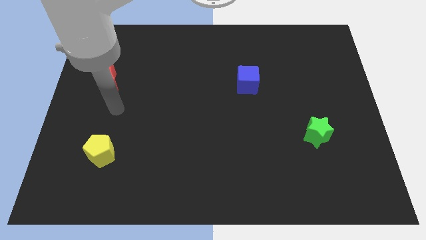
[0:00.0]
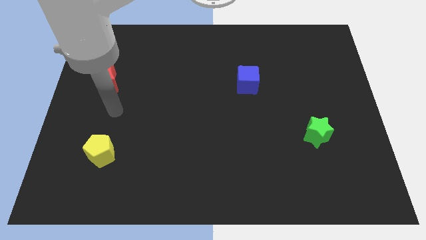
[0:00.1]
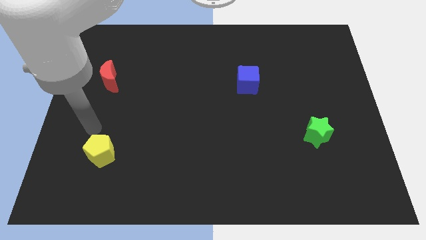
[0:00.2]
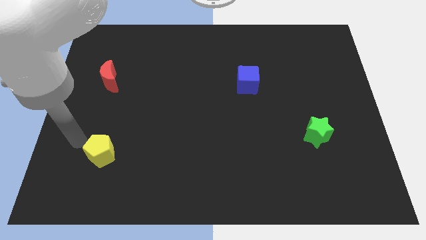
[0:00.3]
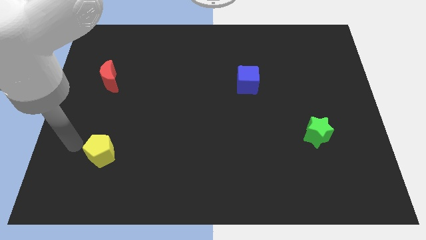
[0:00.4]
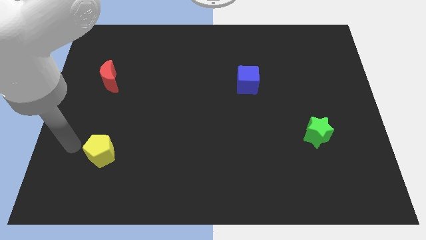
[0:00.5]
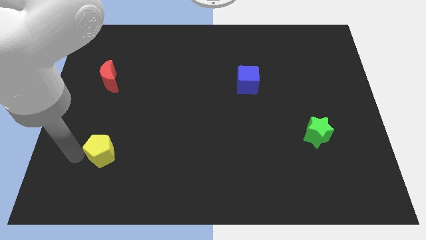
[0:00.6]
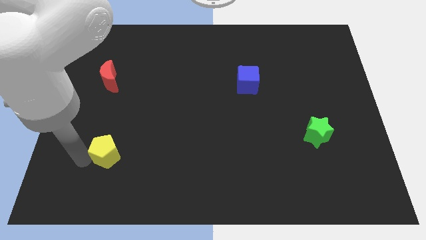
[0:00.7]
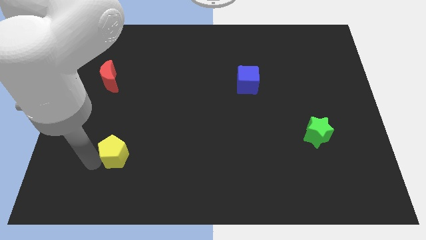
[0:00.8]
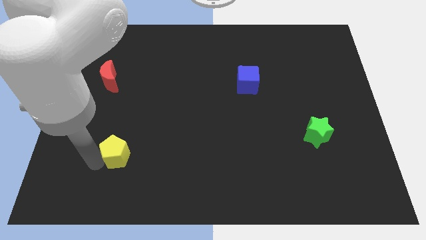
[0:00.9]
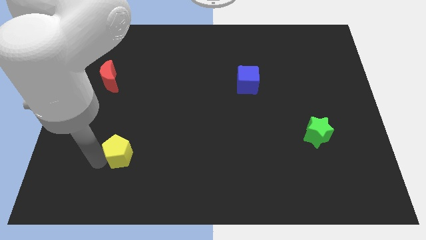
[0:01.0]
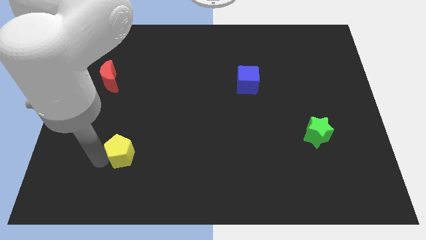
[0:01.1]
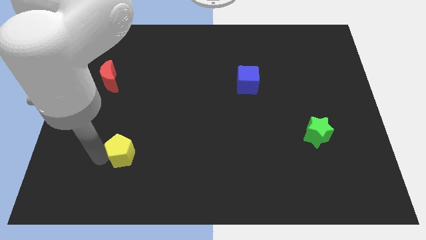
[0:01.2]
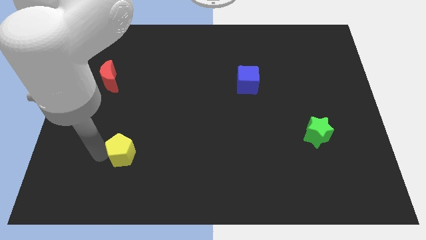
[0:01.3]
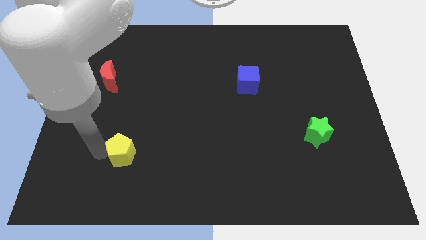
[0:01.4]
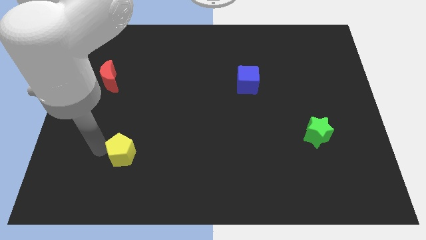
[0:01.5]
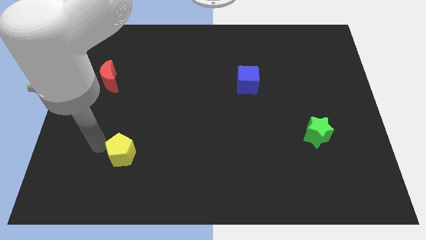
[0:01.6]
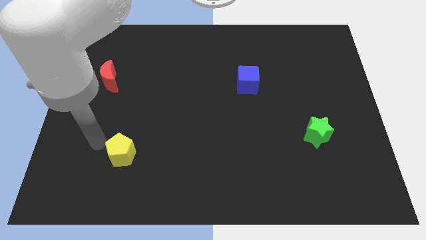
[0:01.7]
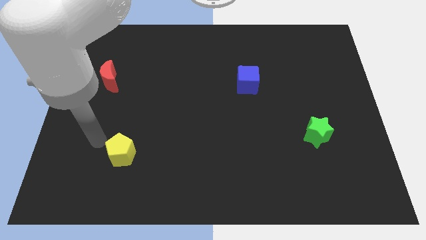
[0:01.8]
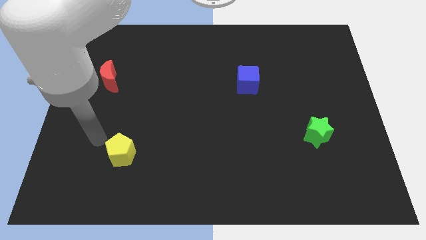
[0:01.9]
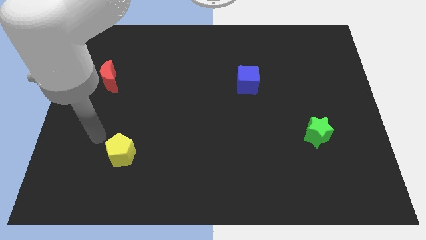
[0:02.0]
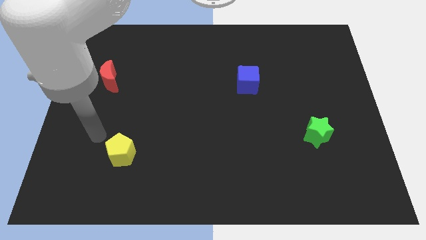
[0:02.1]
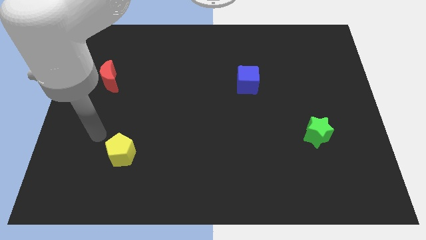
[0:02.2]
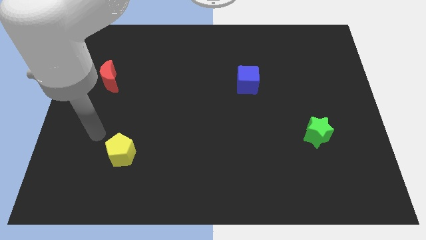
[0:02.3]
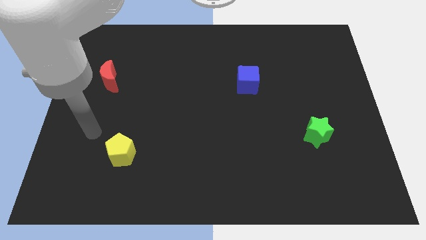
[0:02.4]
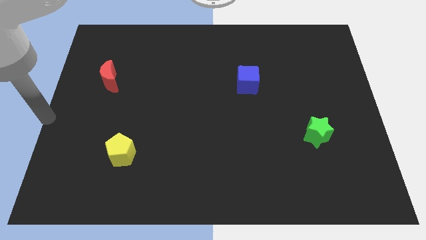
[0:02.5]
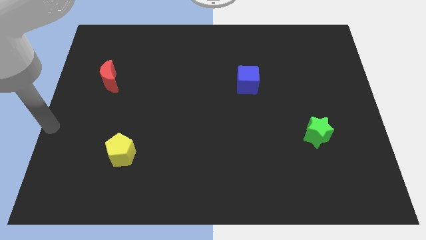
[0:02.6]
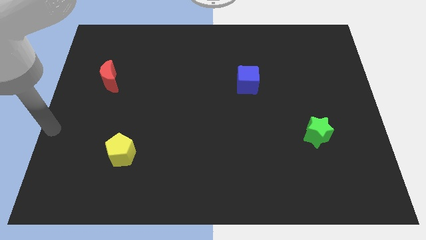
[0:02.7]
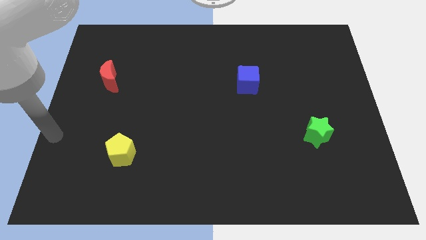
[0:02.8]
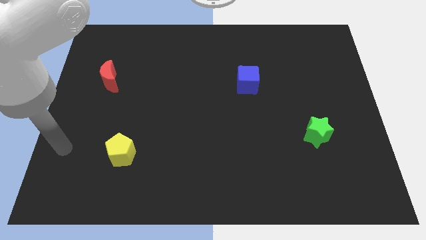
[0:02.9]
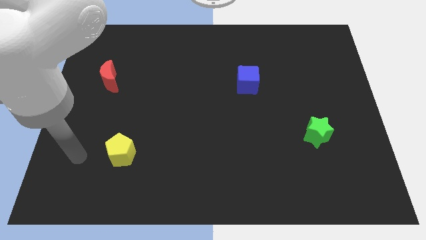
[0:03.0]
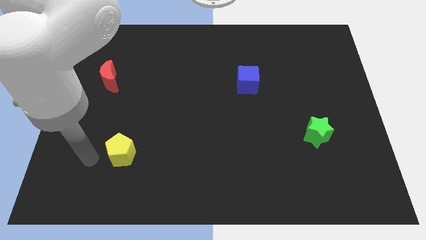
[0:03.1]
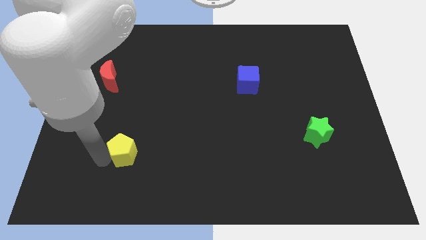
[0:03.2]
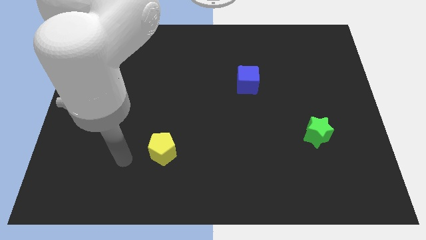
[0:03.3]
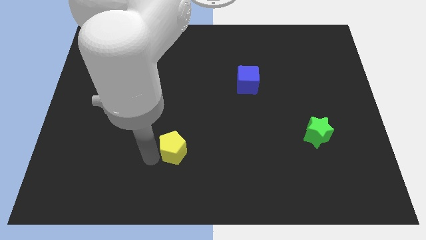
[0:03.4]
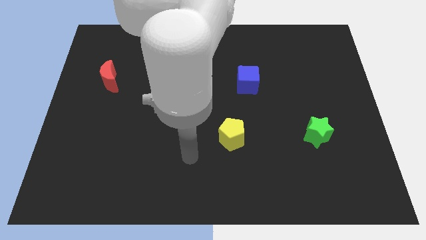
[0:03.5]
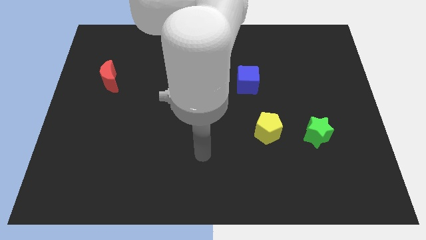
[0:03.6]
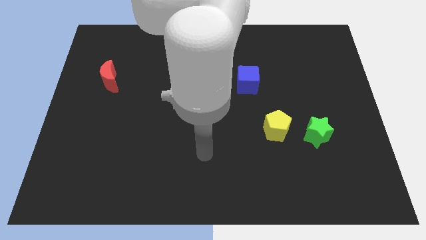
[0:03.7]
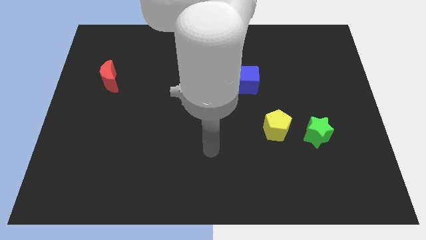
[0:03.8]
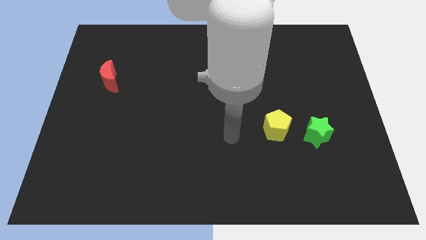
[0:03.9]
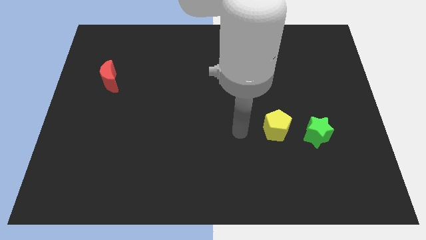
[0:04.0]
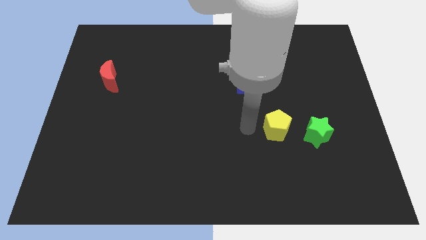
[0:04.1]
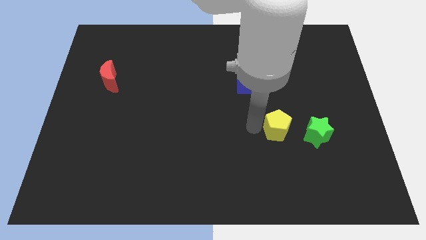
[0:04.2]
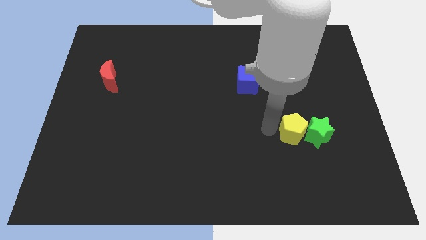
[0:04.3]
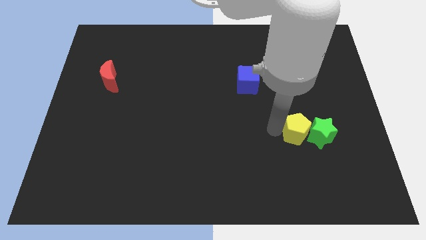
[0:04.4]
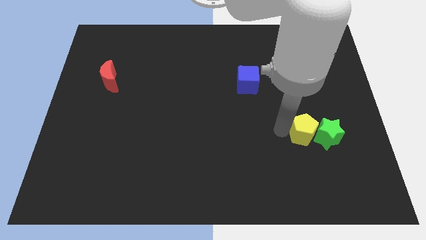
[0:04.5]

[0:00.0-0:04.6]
slide the yellow block close to the green star

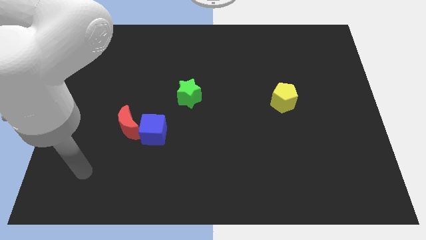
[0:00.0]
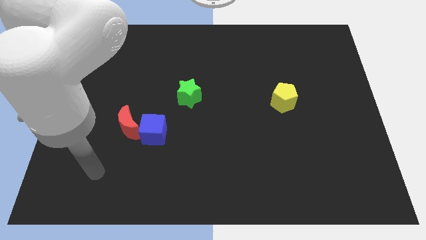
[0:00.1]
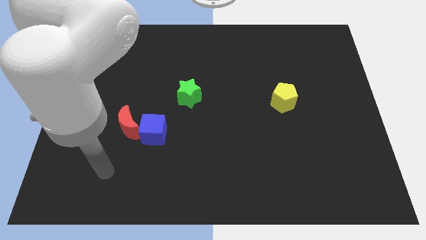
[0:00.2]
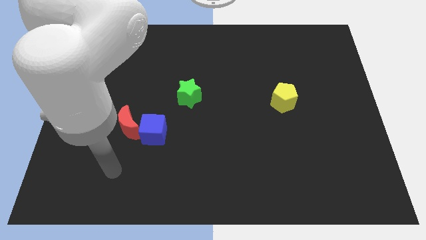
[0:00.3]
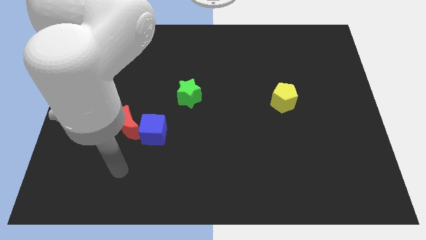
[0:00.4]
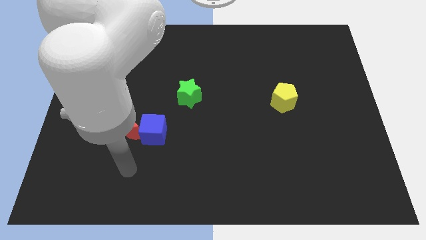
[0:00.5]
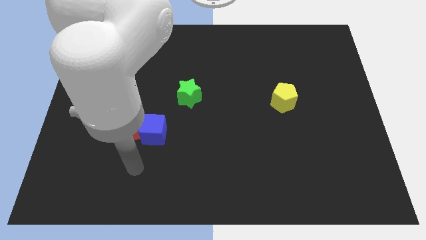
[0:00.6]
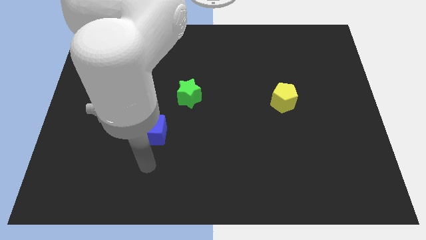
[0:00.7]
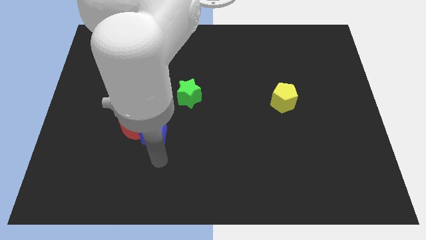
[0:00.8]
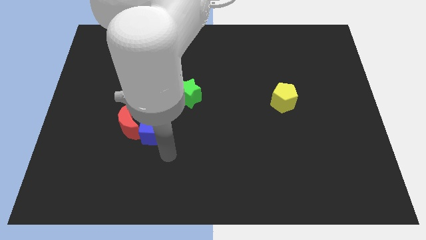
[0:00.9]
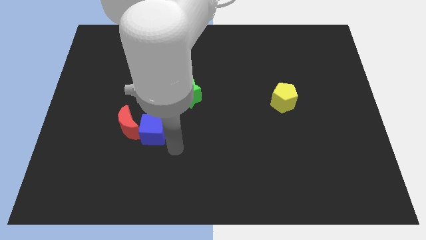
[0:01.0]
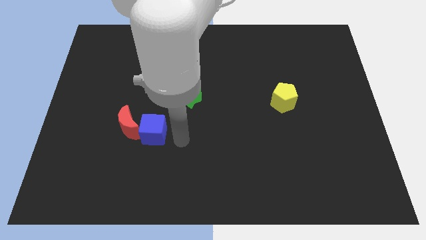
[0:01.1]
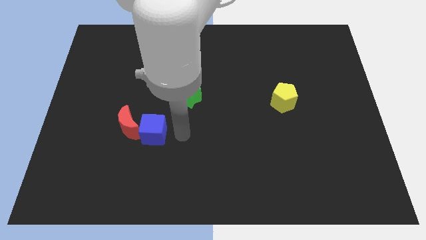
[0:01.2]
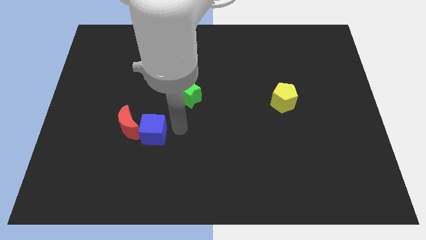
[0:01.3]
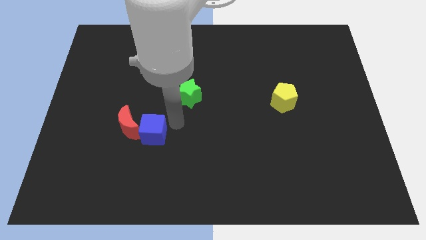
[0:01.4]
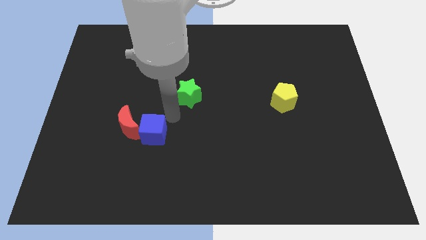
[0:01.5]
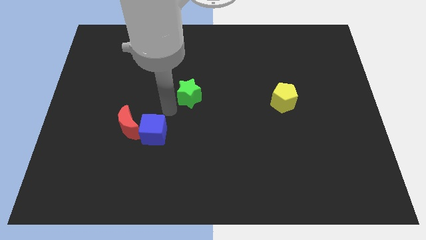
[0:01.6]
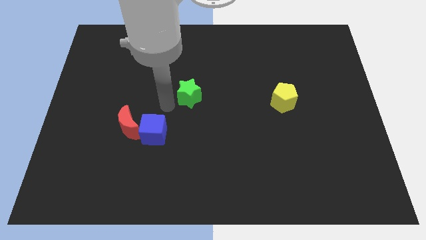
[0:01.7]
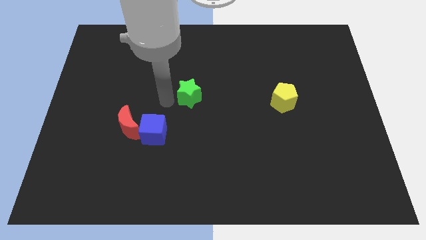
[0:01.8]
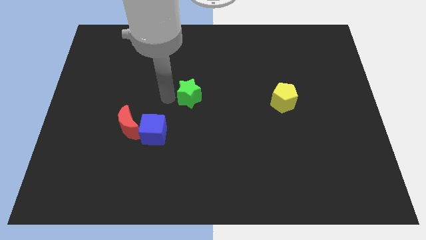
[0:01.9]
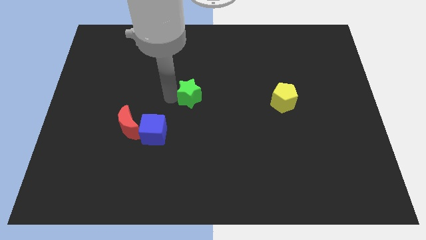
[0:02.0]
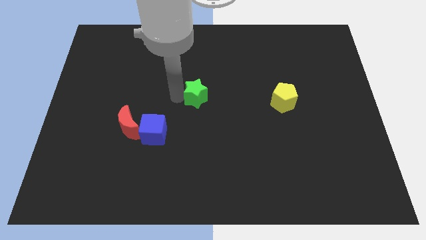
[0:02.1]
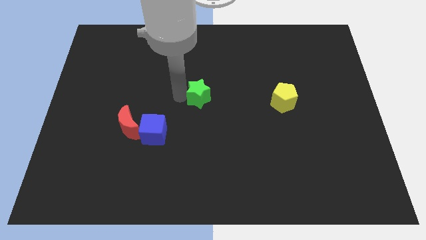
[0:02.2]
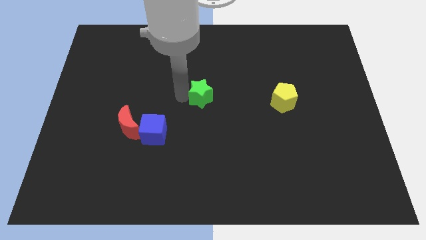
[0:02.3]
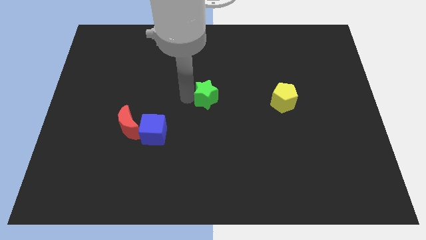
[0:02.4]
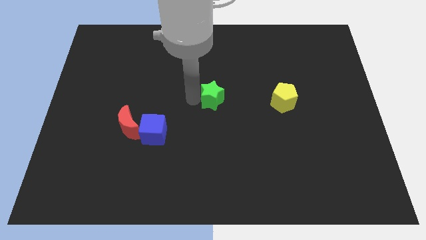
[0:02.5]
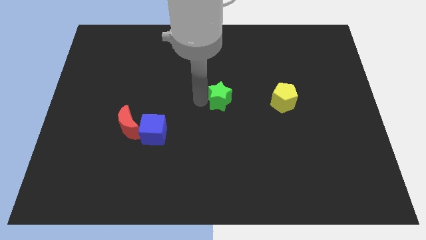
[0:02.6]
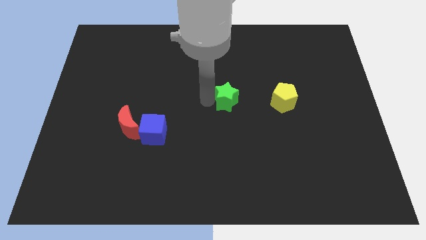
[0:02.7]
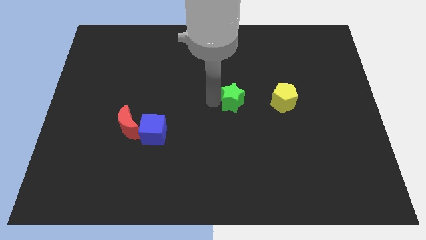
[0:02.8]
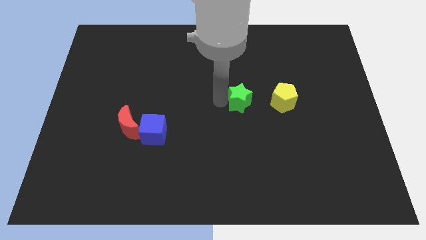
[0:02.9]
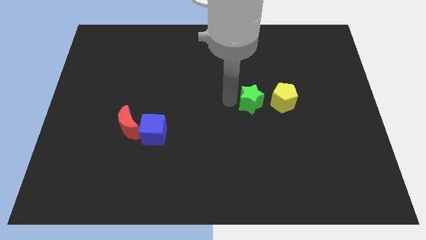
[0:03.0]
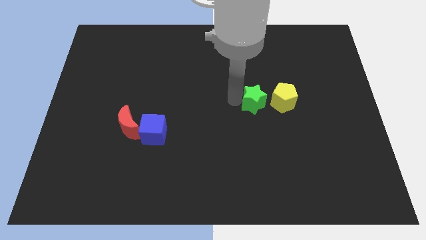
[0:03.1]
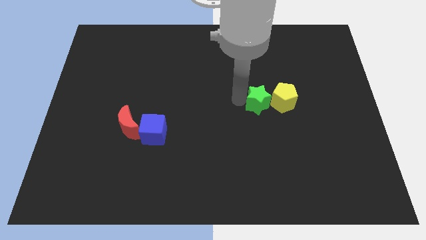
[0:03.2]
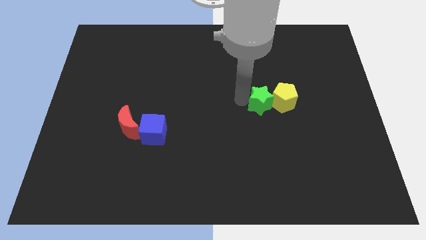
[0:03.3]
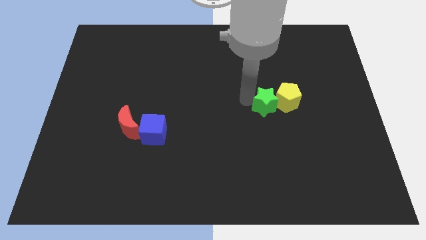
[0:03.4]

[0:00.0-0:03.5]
put the green star to the yellow block

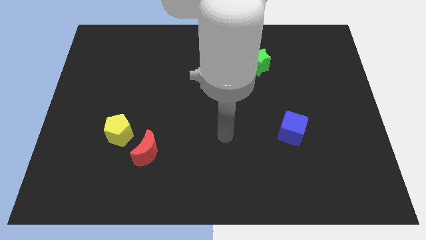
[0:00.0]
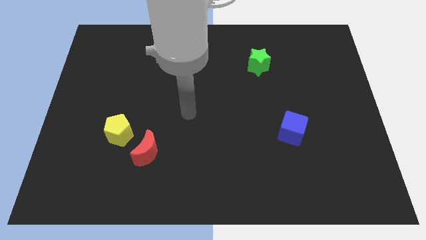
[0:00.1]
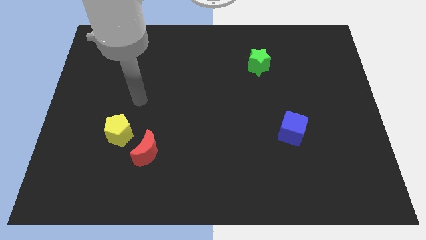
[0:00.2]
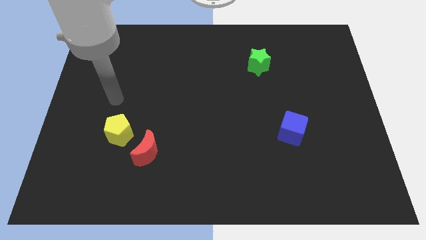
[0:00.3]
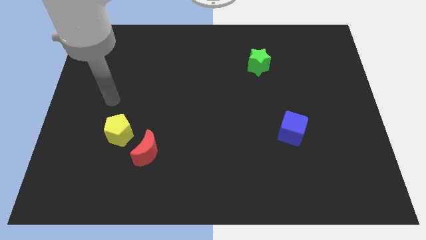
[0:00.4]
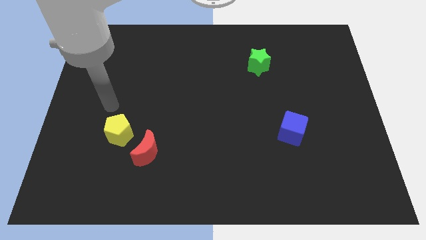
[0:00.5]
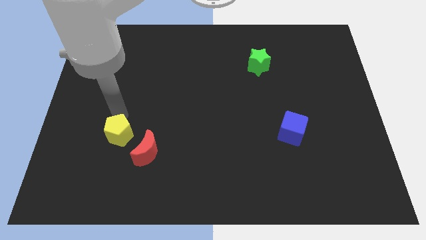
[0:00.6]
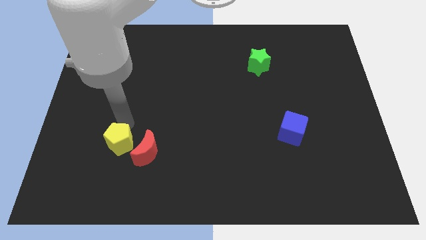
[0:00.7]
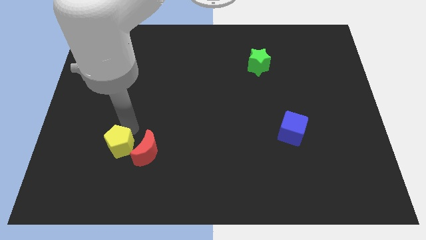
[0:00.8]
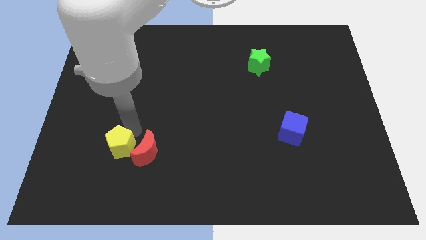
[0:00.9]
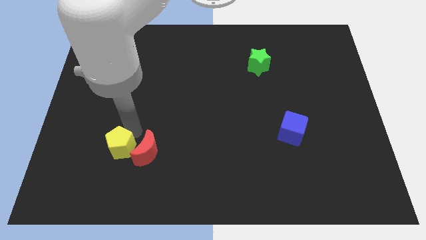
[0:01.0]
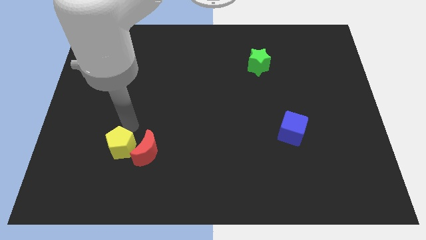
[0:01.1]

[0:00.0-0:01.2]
push the yellow block close to the red block
